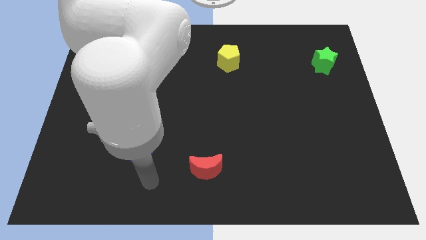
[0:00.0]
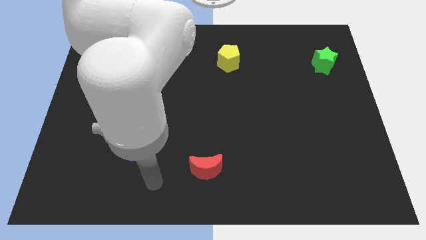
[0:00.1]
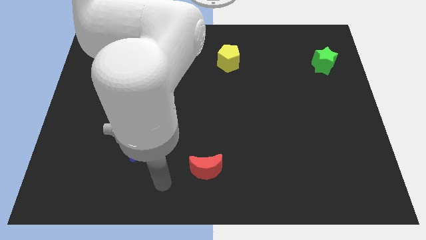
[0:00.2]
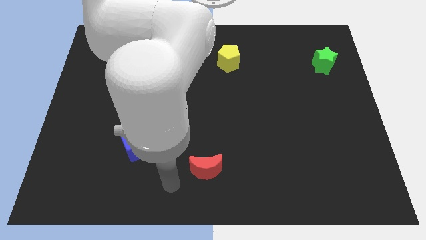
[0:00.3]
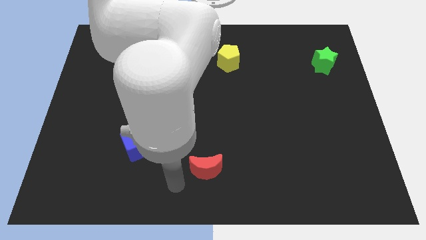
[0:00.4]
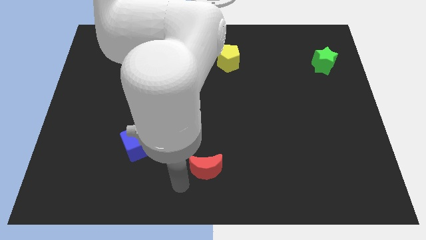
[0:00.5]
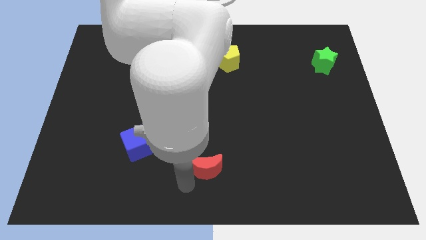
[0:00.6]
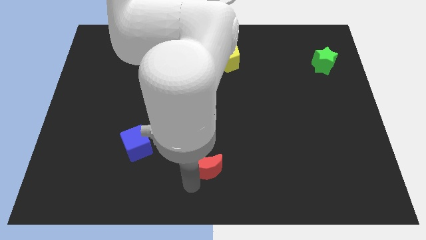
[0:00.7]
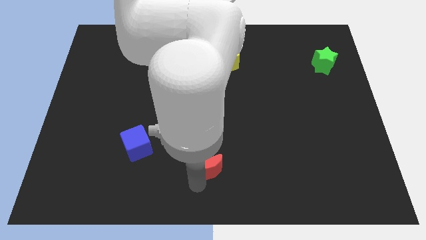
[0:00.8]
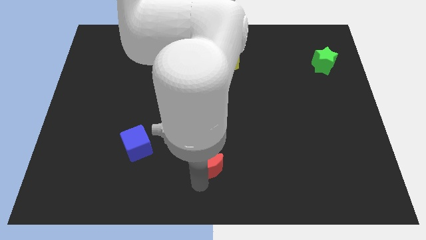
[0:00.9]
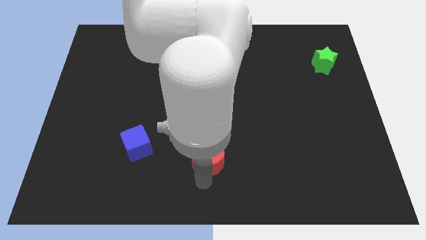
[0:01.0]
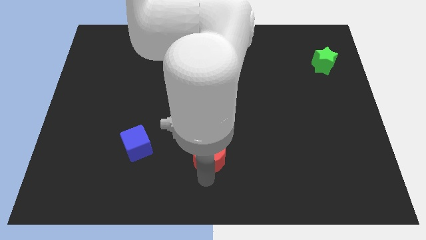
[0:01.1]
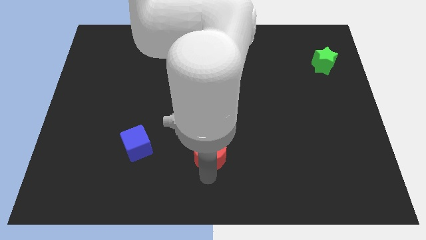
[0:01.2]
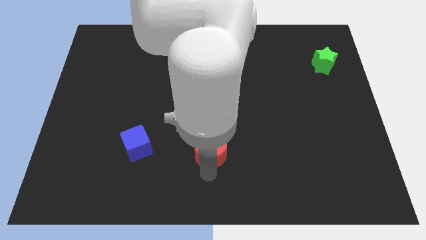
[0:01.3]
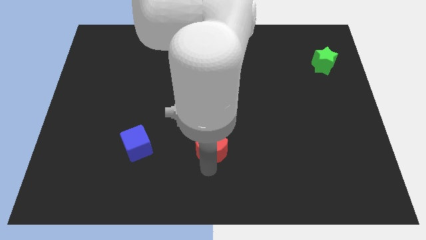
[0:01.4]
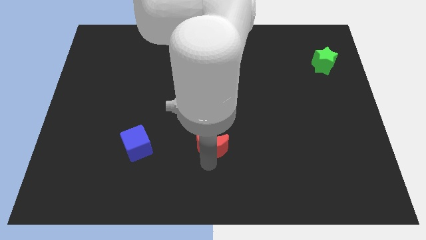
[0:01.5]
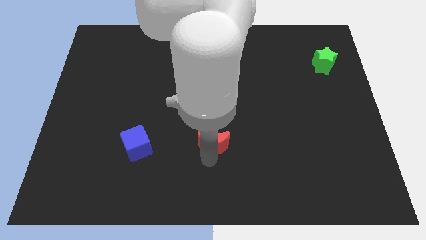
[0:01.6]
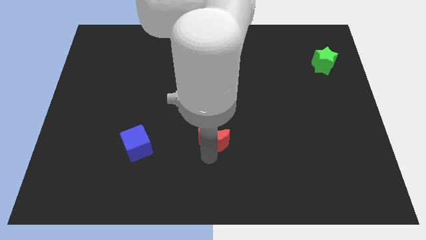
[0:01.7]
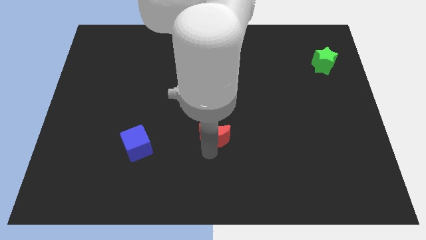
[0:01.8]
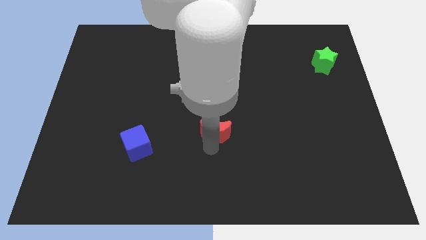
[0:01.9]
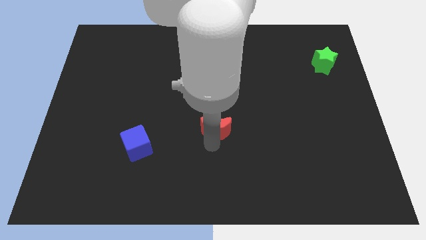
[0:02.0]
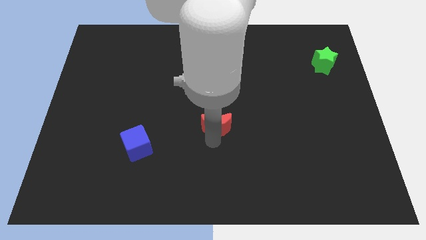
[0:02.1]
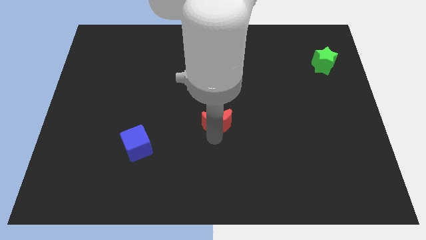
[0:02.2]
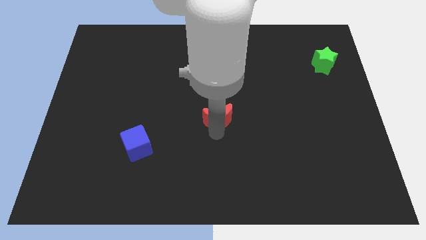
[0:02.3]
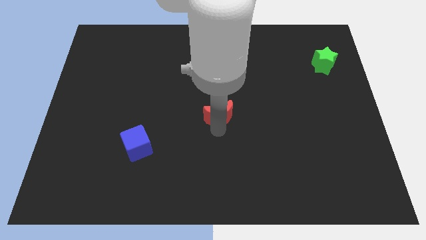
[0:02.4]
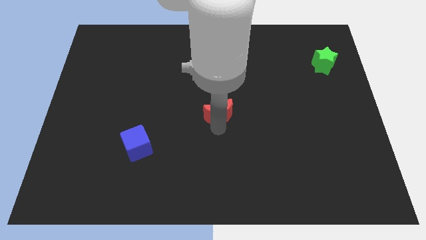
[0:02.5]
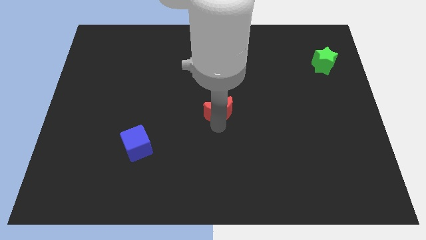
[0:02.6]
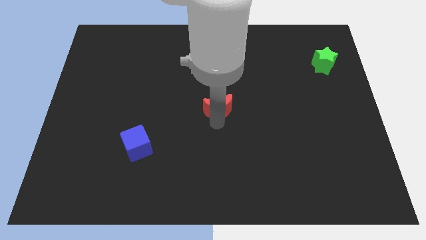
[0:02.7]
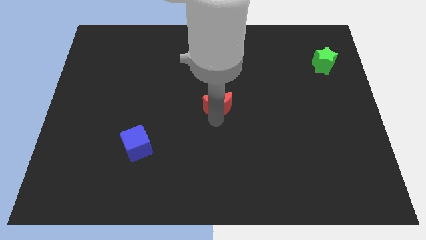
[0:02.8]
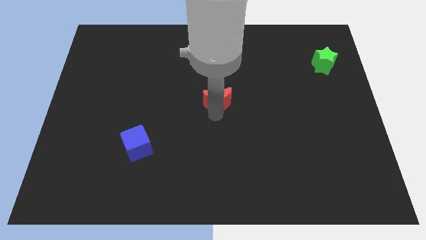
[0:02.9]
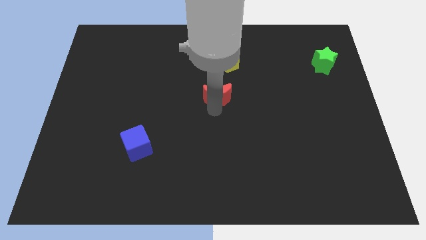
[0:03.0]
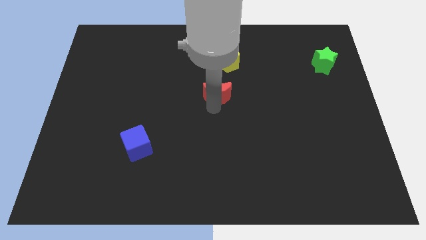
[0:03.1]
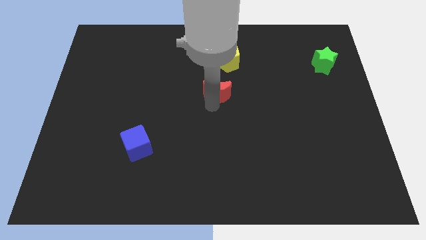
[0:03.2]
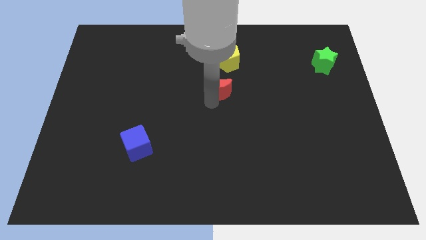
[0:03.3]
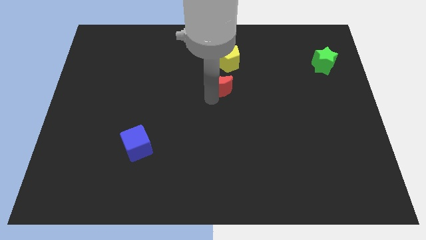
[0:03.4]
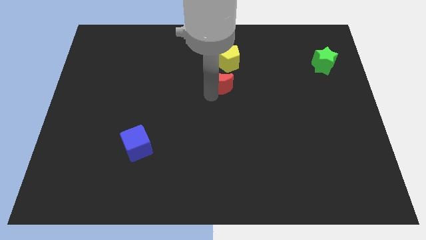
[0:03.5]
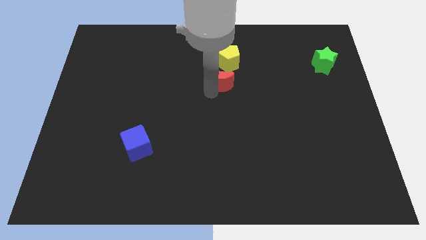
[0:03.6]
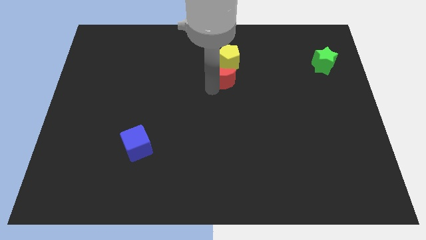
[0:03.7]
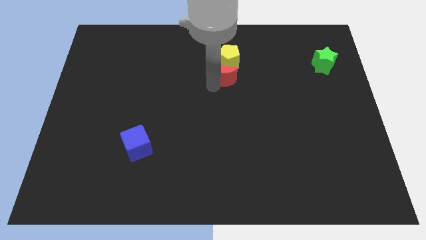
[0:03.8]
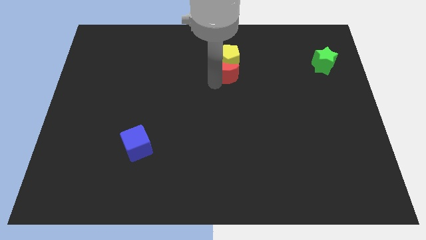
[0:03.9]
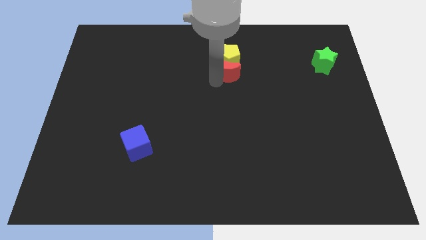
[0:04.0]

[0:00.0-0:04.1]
put the moon next to the pentagon

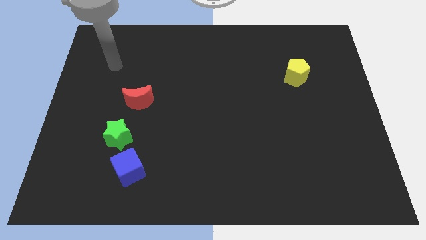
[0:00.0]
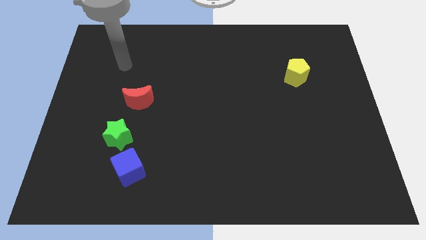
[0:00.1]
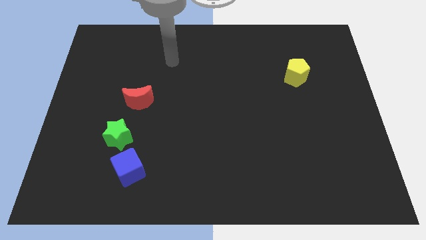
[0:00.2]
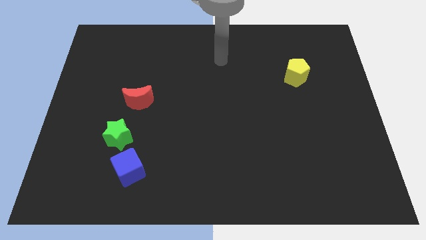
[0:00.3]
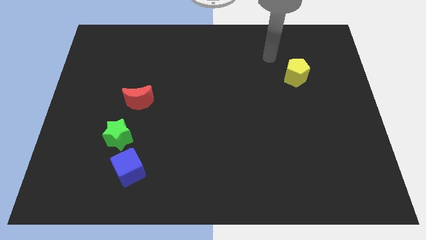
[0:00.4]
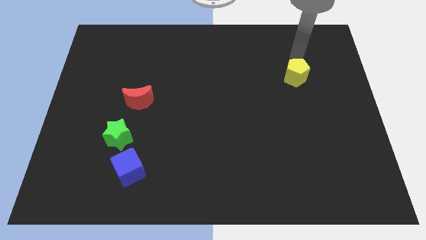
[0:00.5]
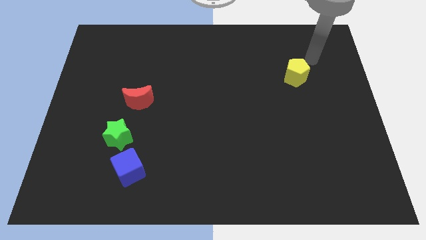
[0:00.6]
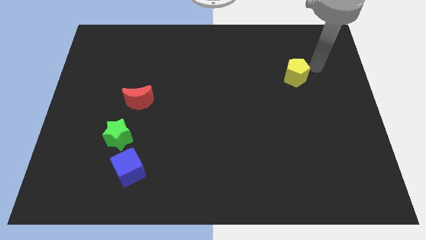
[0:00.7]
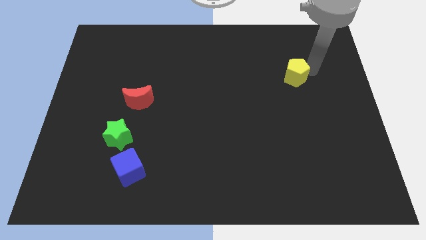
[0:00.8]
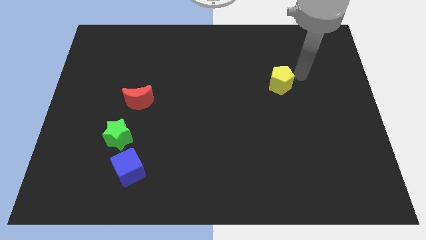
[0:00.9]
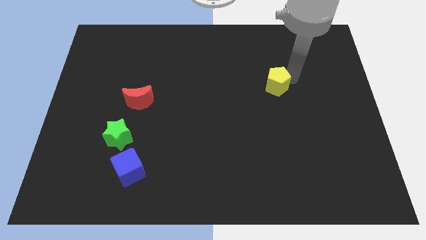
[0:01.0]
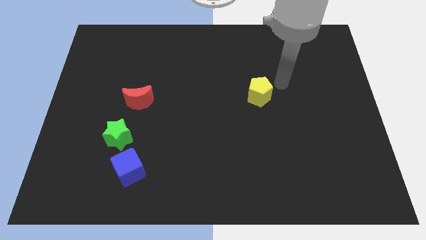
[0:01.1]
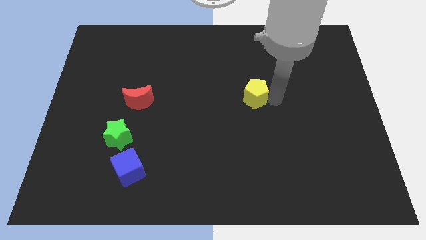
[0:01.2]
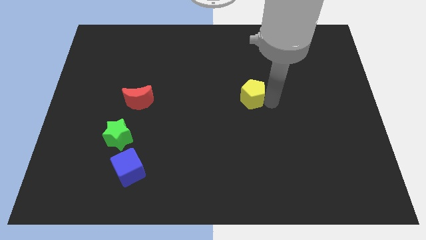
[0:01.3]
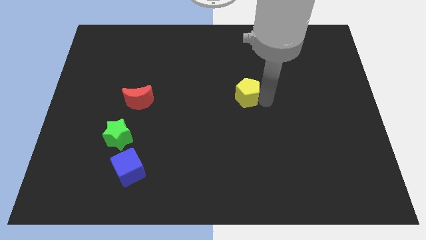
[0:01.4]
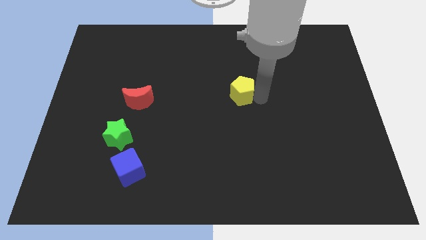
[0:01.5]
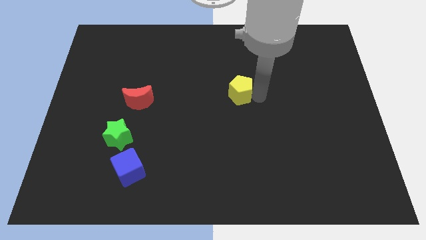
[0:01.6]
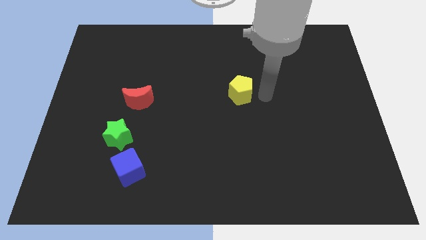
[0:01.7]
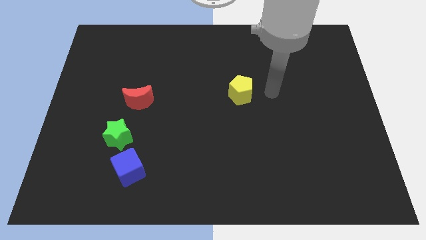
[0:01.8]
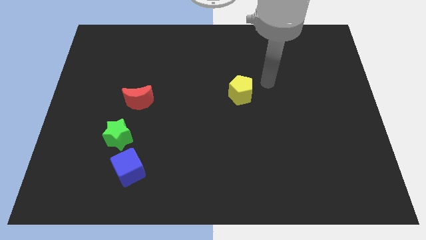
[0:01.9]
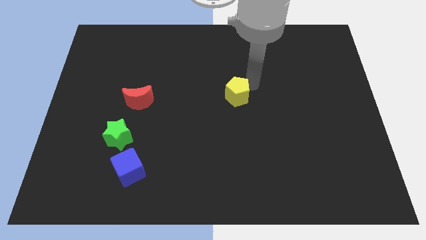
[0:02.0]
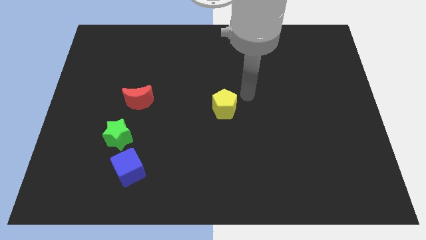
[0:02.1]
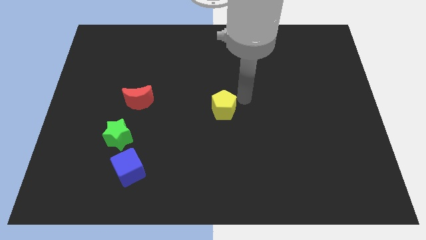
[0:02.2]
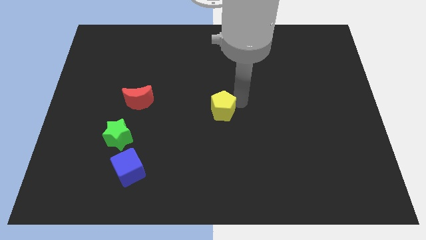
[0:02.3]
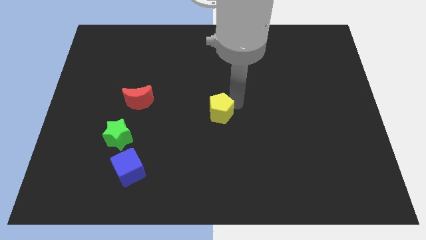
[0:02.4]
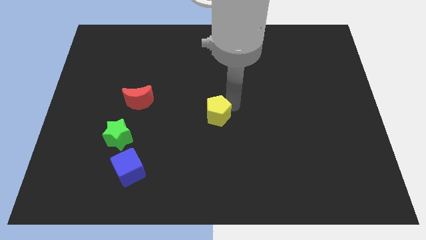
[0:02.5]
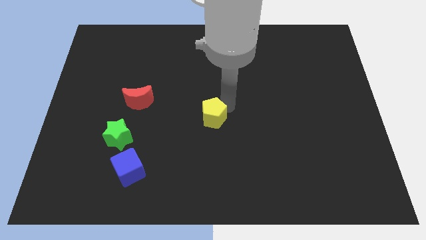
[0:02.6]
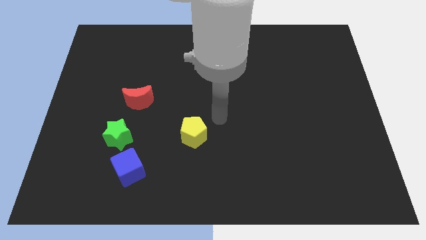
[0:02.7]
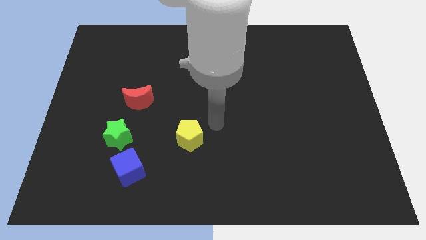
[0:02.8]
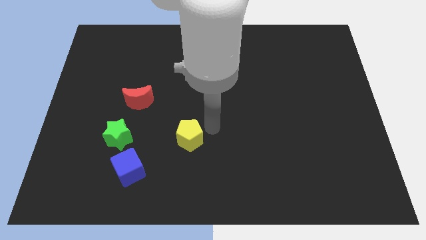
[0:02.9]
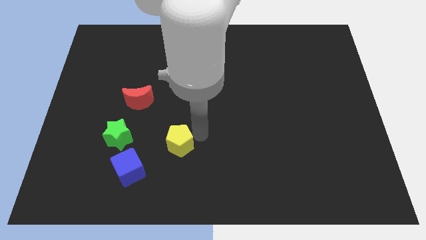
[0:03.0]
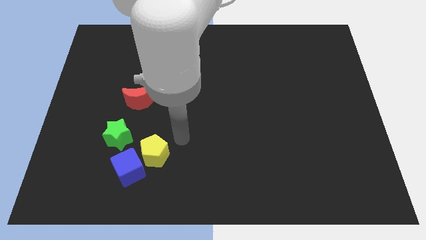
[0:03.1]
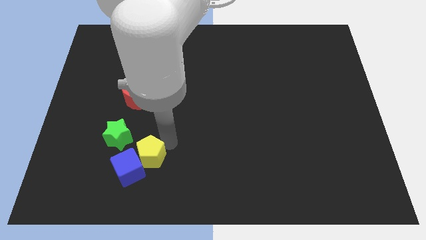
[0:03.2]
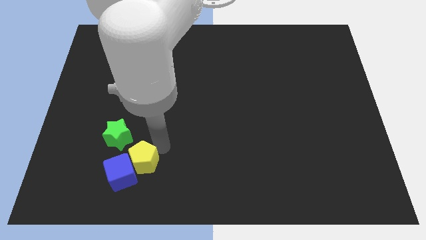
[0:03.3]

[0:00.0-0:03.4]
move the yellow pentagon to the cube

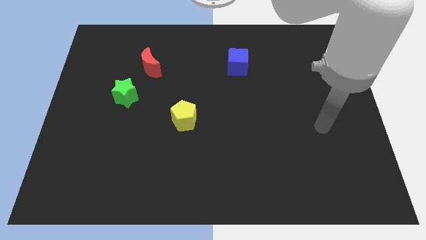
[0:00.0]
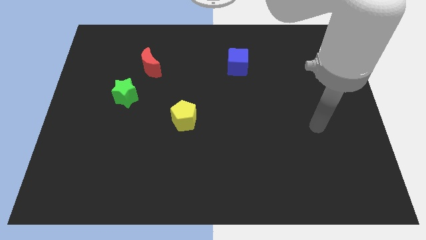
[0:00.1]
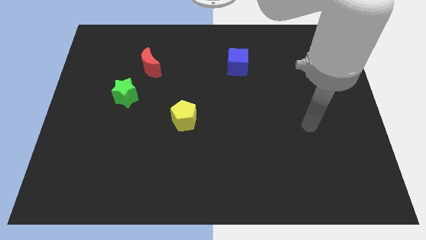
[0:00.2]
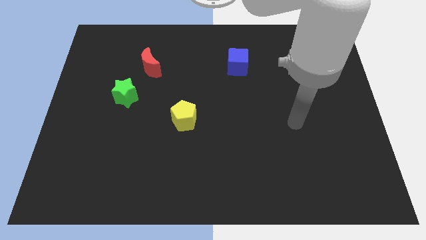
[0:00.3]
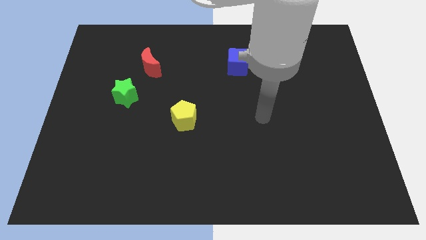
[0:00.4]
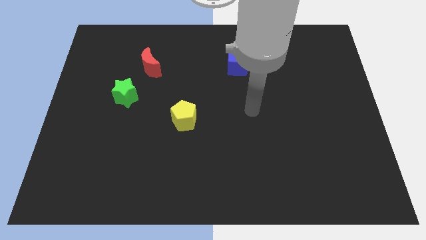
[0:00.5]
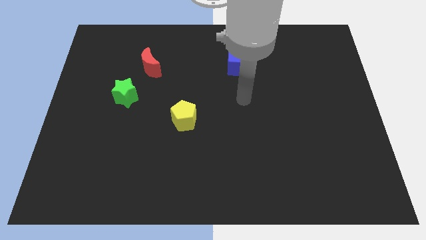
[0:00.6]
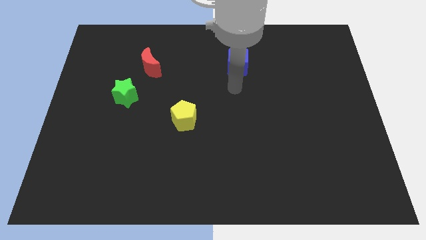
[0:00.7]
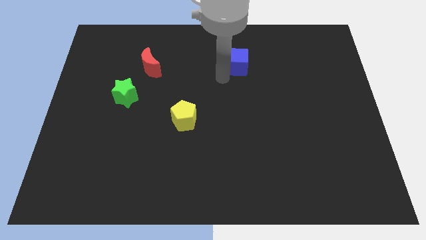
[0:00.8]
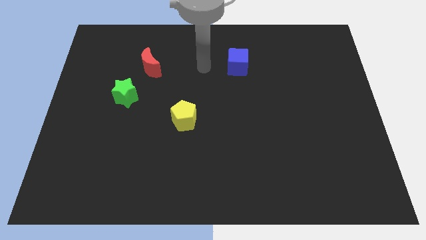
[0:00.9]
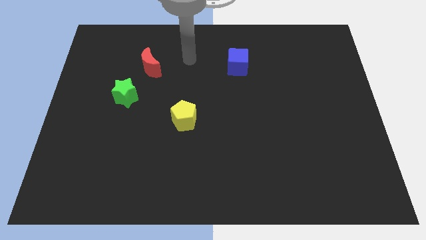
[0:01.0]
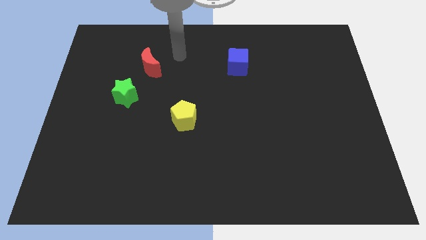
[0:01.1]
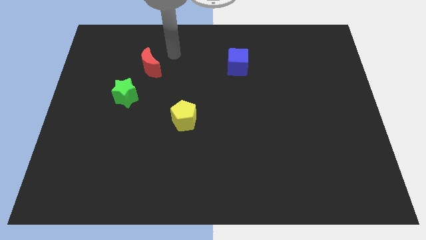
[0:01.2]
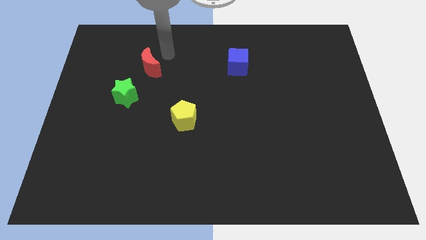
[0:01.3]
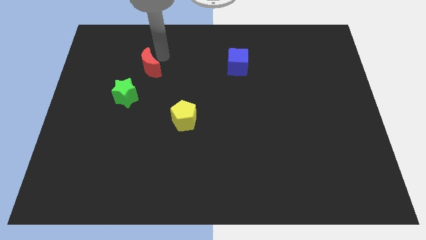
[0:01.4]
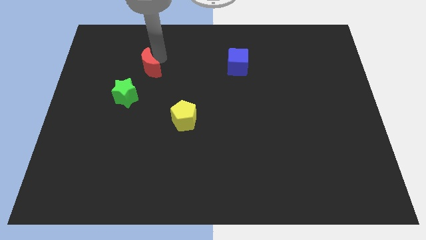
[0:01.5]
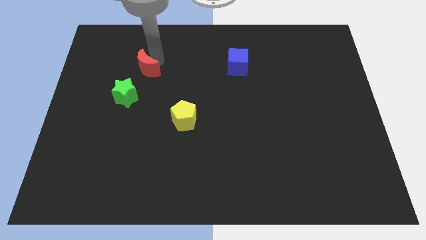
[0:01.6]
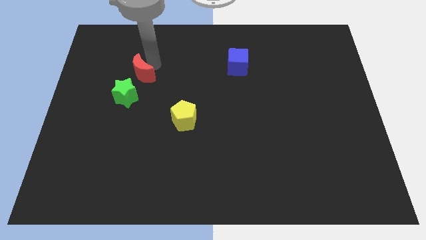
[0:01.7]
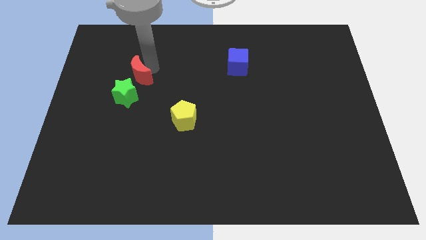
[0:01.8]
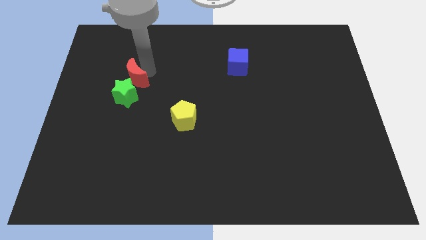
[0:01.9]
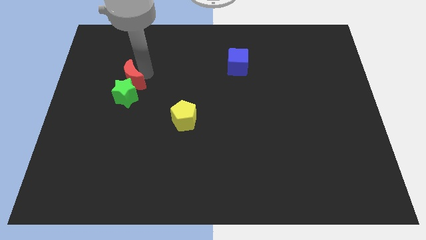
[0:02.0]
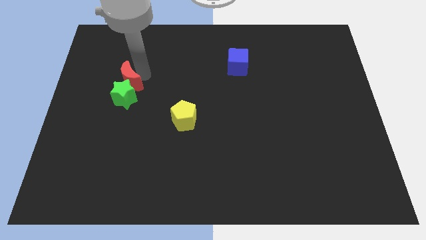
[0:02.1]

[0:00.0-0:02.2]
move the red moon next to the green star
